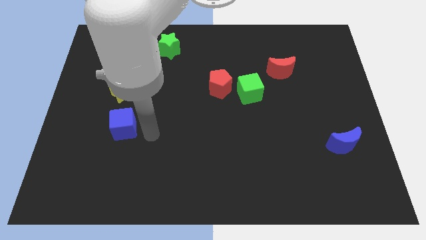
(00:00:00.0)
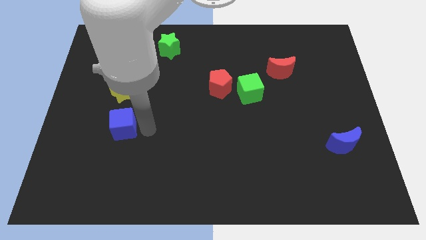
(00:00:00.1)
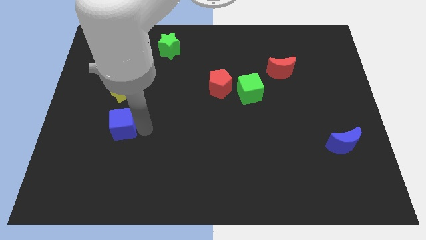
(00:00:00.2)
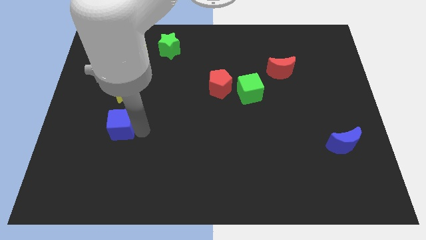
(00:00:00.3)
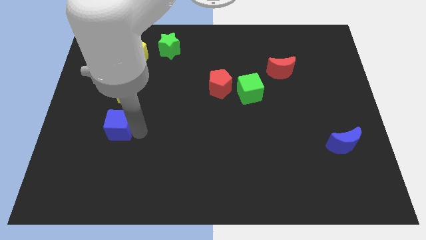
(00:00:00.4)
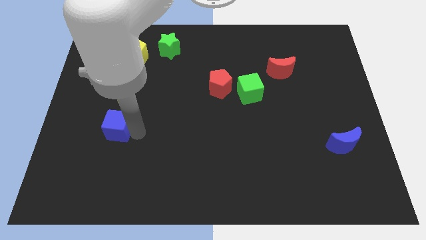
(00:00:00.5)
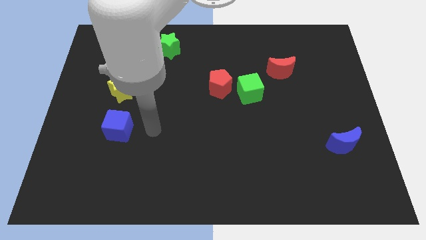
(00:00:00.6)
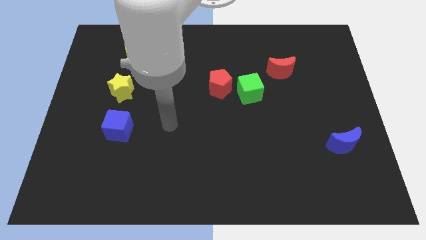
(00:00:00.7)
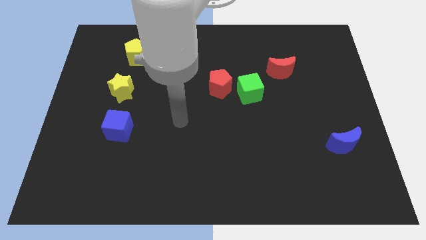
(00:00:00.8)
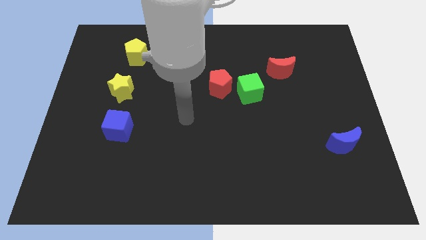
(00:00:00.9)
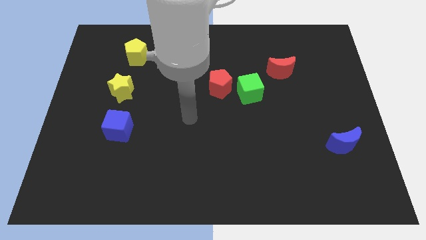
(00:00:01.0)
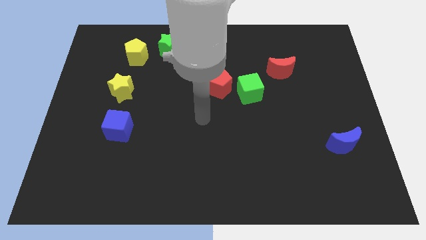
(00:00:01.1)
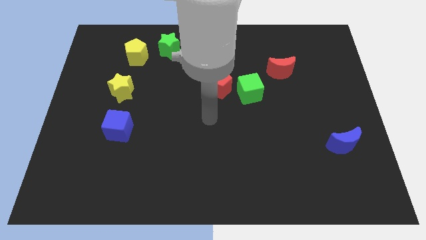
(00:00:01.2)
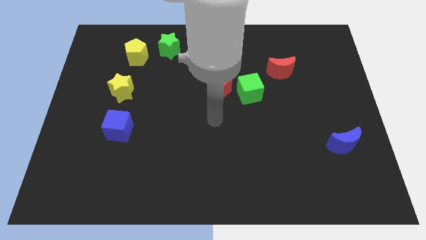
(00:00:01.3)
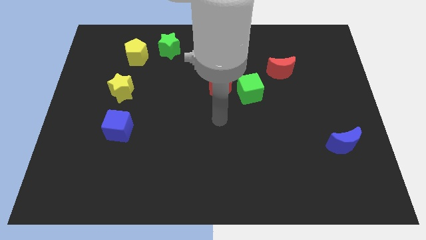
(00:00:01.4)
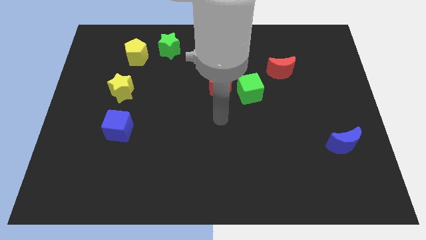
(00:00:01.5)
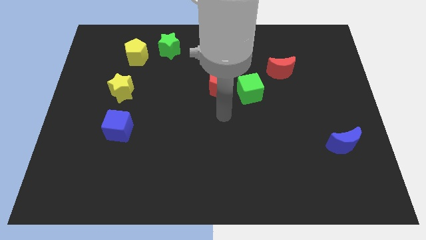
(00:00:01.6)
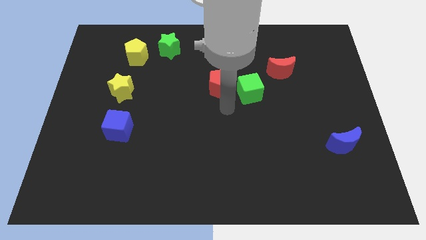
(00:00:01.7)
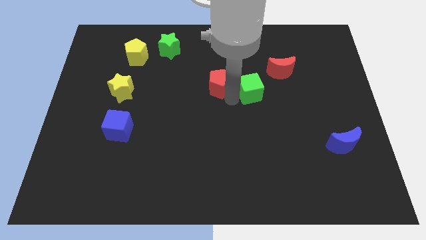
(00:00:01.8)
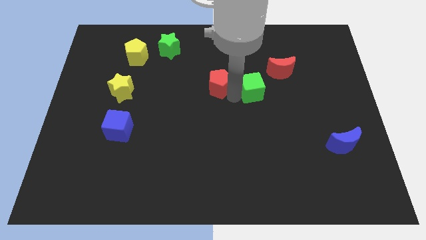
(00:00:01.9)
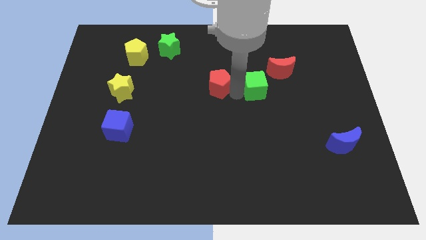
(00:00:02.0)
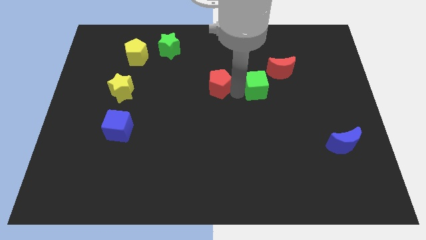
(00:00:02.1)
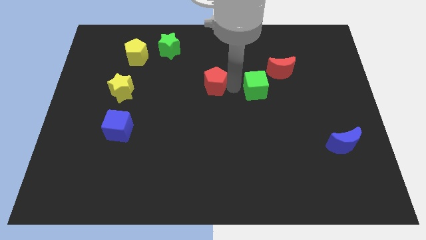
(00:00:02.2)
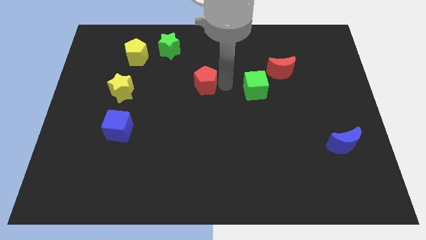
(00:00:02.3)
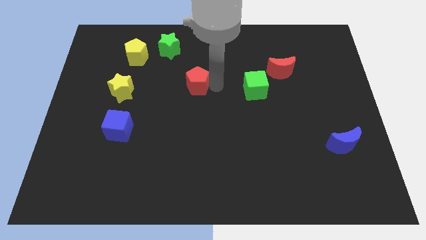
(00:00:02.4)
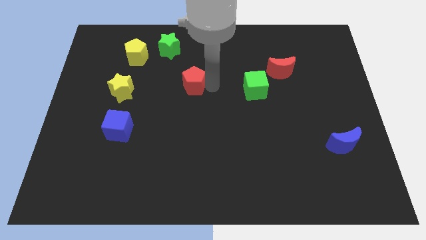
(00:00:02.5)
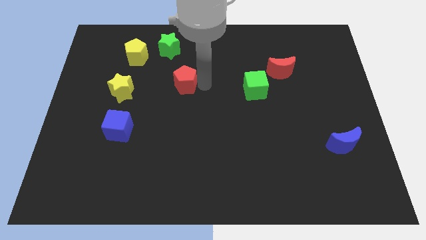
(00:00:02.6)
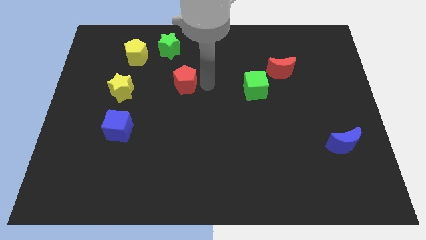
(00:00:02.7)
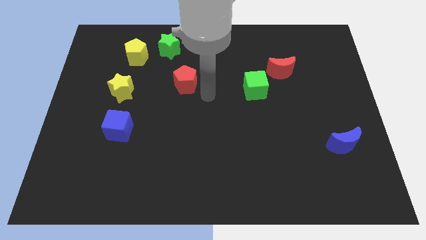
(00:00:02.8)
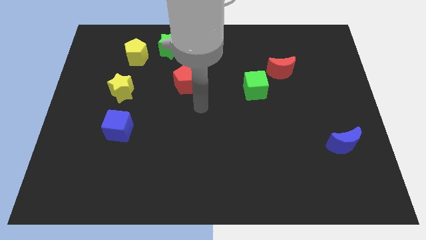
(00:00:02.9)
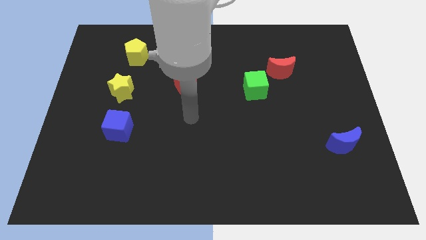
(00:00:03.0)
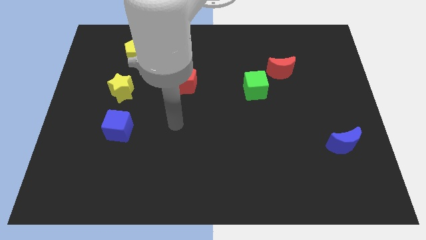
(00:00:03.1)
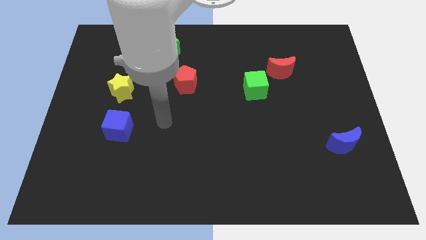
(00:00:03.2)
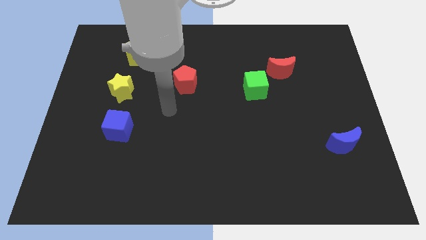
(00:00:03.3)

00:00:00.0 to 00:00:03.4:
separate red pentagon from green cube

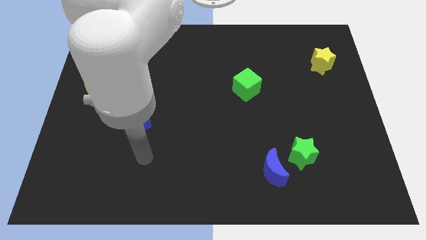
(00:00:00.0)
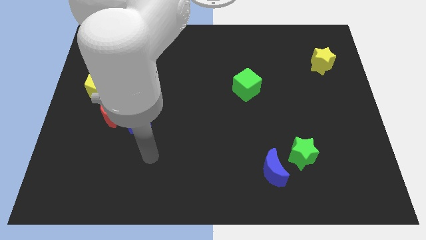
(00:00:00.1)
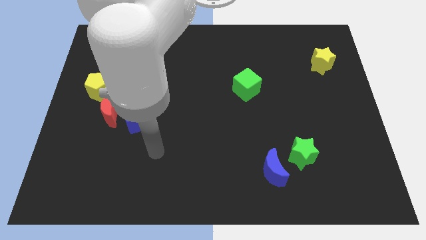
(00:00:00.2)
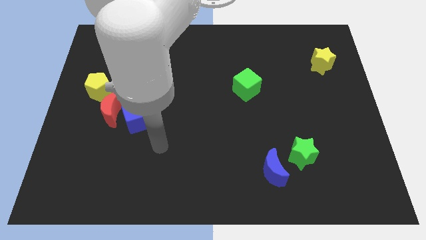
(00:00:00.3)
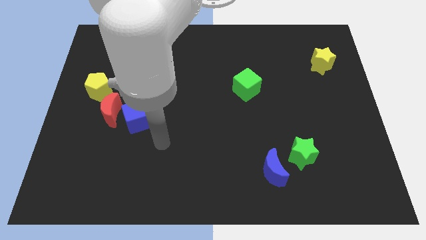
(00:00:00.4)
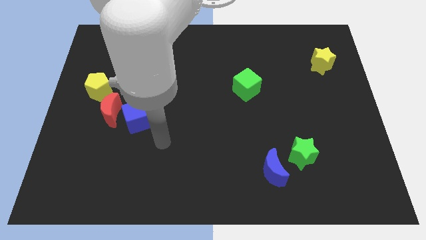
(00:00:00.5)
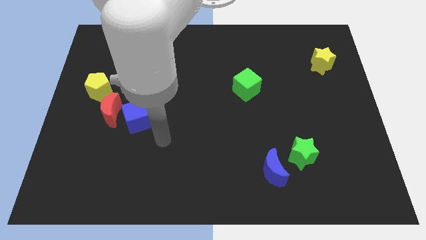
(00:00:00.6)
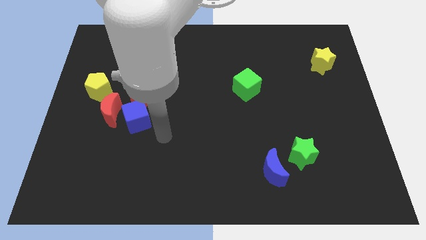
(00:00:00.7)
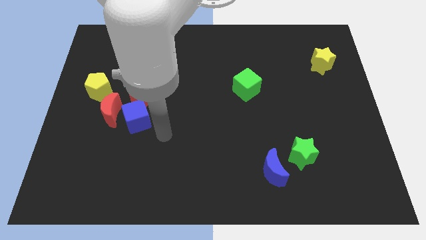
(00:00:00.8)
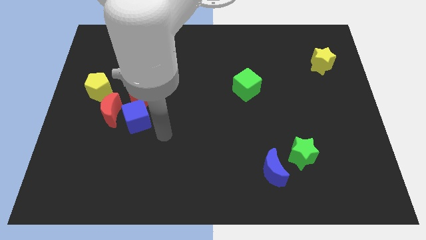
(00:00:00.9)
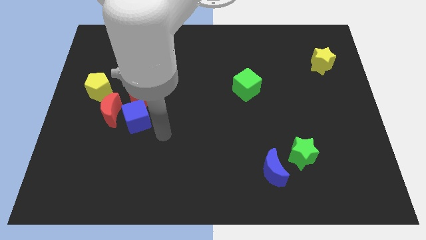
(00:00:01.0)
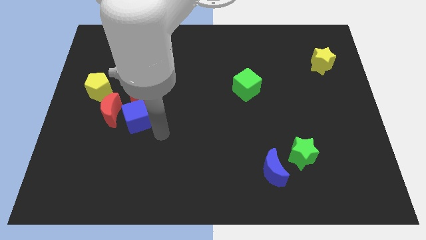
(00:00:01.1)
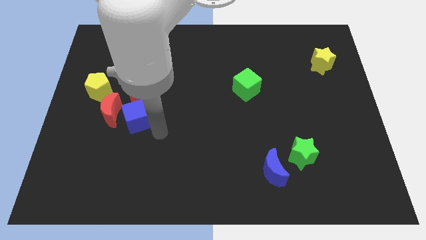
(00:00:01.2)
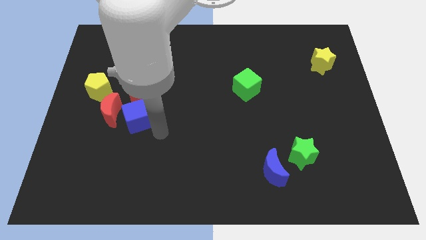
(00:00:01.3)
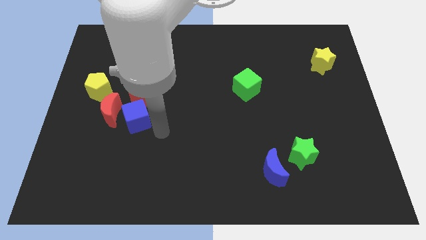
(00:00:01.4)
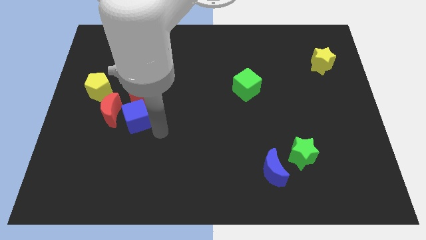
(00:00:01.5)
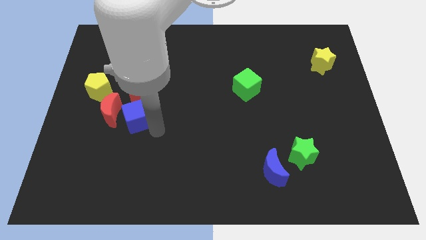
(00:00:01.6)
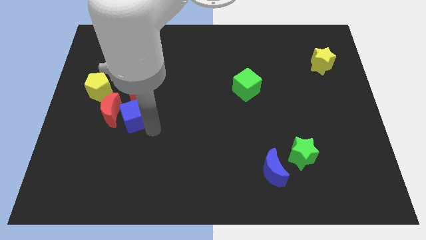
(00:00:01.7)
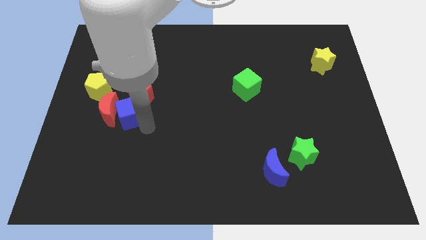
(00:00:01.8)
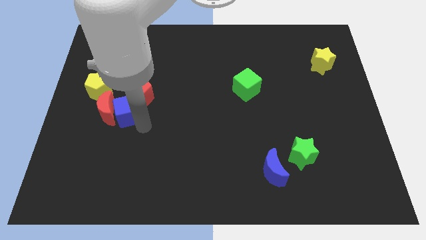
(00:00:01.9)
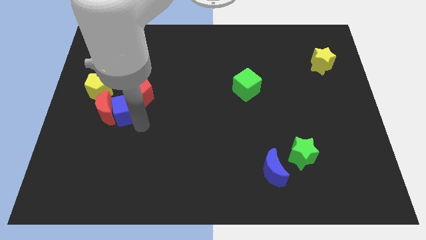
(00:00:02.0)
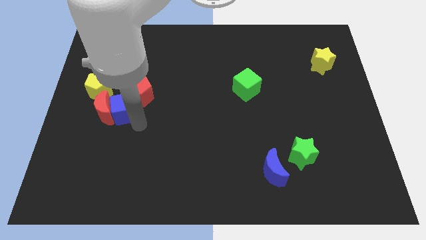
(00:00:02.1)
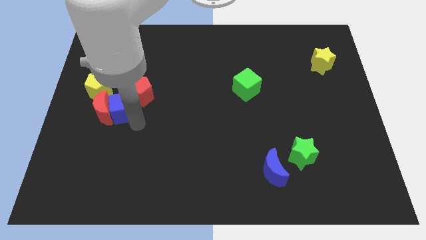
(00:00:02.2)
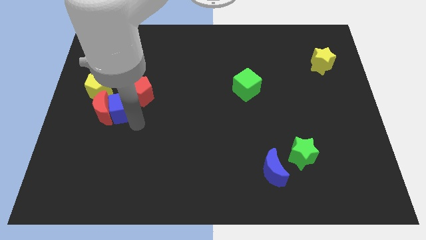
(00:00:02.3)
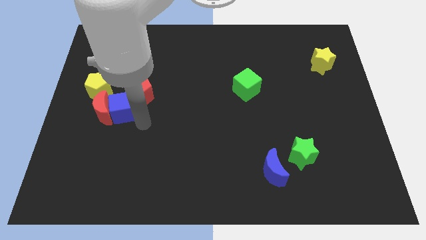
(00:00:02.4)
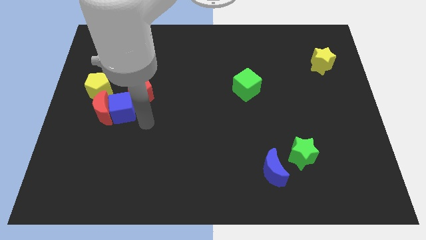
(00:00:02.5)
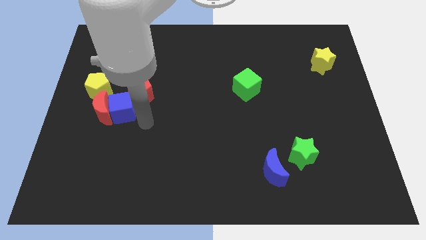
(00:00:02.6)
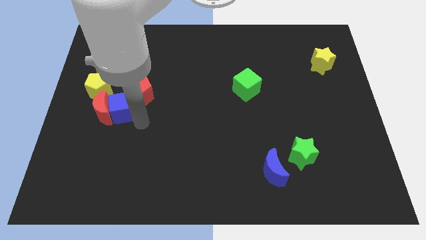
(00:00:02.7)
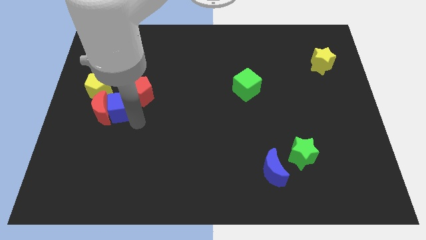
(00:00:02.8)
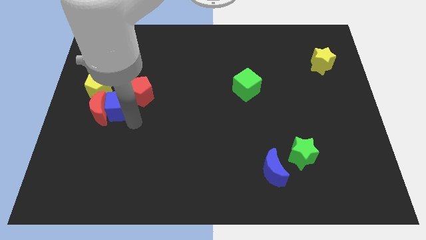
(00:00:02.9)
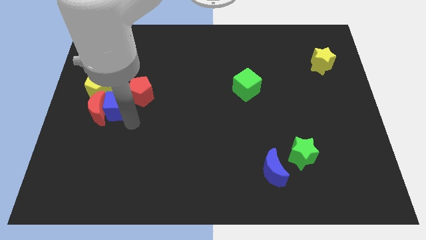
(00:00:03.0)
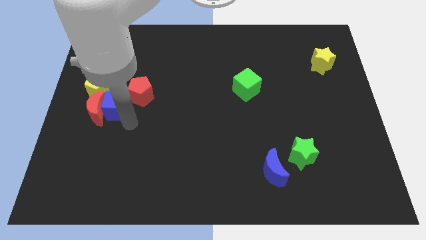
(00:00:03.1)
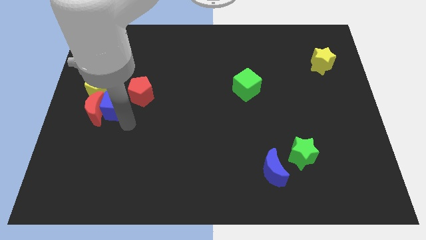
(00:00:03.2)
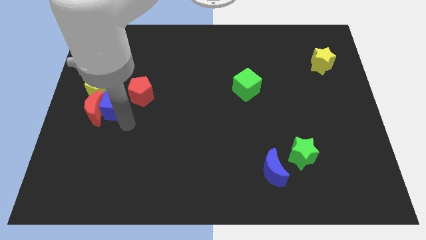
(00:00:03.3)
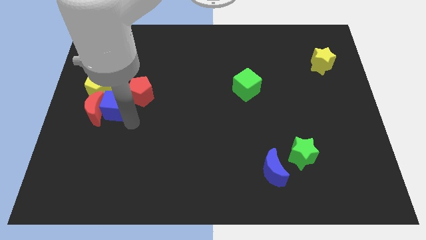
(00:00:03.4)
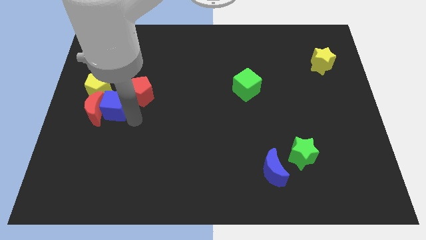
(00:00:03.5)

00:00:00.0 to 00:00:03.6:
push the red moon and blue cube towards the left center of the board

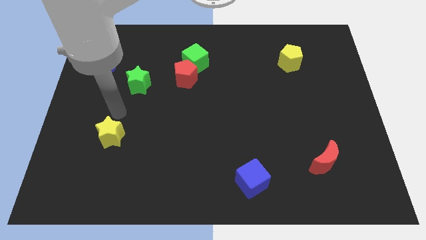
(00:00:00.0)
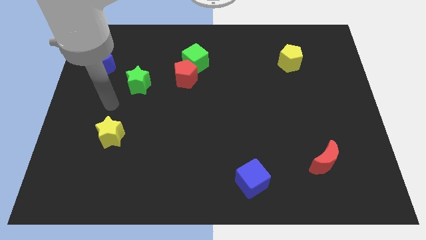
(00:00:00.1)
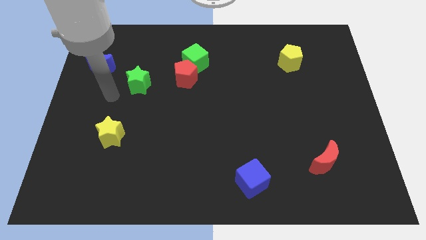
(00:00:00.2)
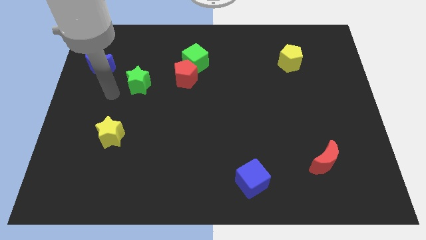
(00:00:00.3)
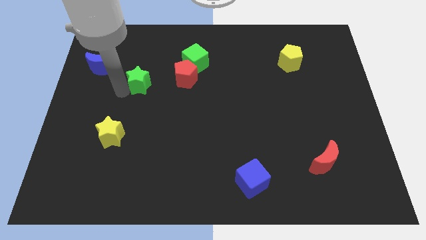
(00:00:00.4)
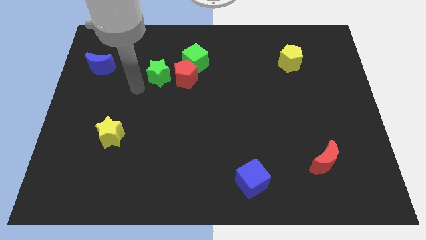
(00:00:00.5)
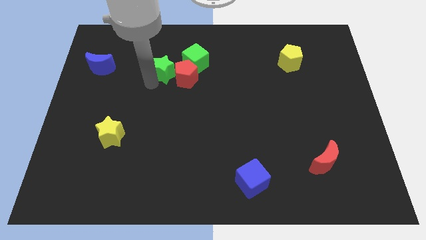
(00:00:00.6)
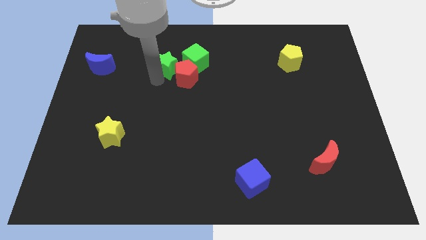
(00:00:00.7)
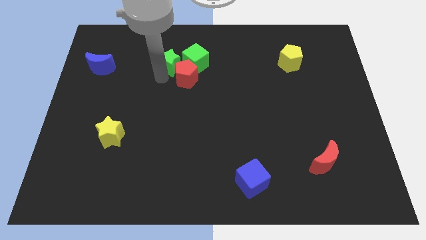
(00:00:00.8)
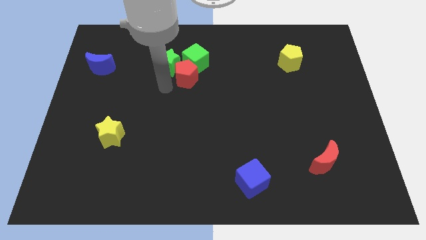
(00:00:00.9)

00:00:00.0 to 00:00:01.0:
push green star near green cube

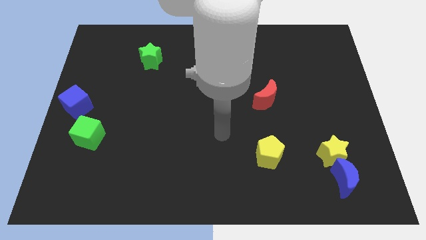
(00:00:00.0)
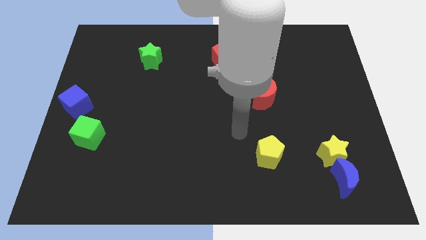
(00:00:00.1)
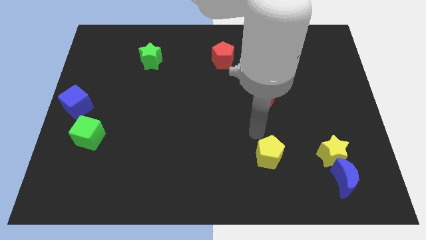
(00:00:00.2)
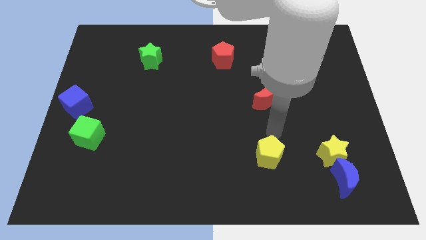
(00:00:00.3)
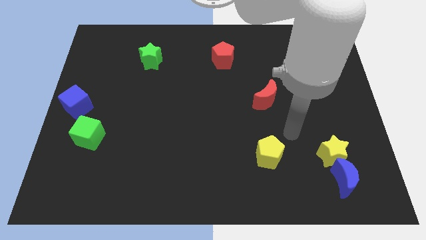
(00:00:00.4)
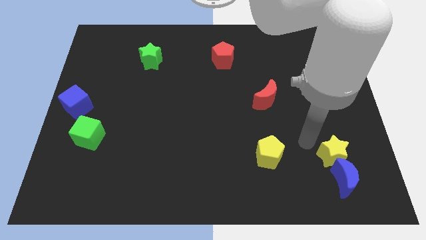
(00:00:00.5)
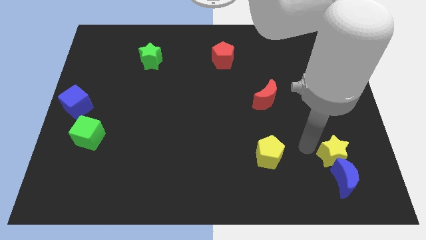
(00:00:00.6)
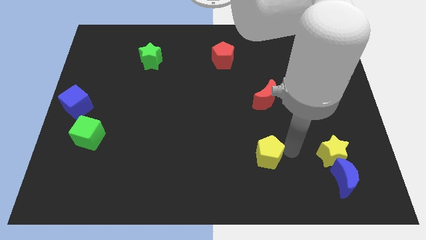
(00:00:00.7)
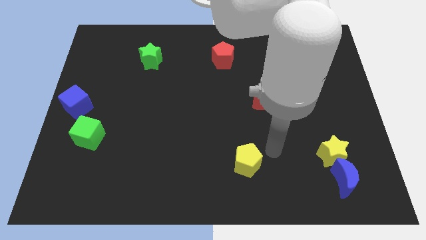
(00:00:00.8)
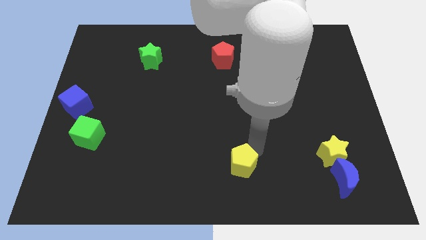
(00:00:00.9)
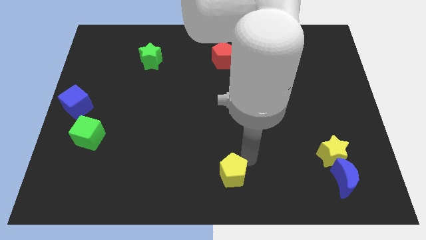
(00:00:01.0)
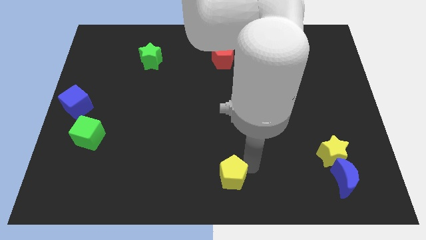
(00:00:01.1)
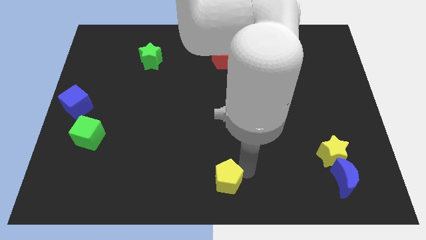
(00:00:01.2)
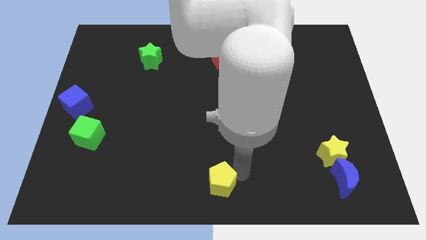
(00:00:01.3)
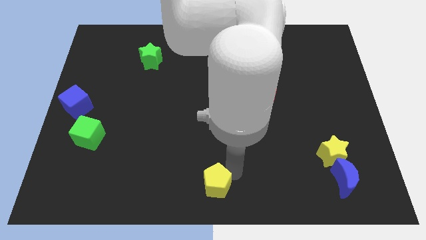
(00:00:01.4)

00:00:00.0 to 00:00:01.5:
move the yellow pentagon to the center bottom of the board
